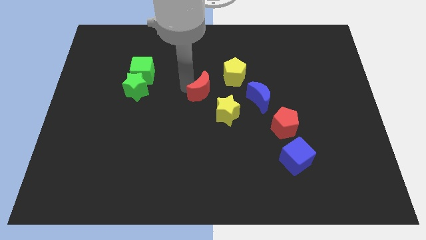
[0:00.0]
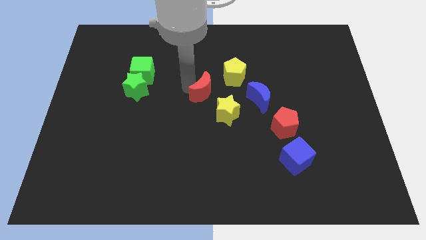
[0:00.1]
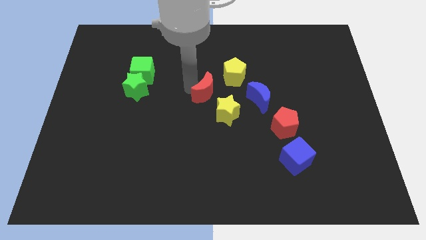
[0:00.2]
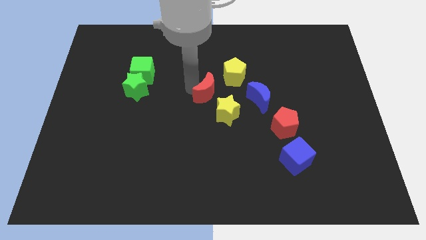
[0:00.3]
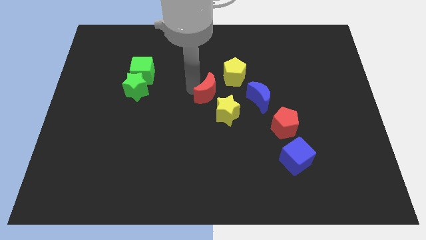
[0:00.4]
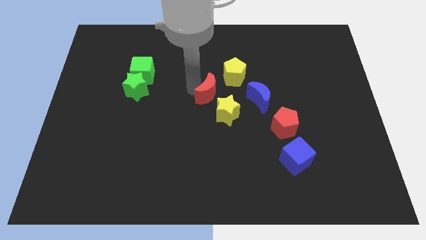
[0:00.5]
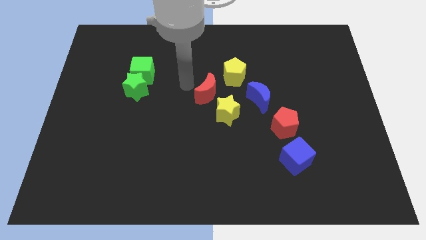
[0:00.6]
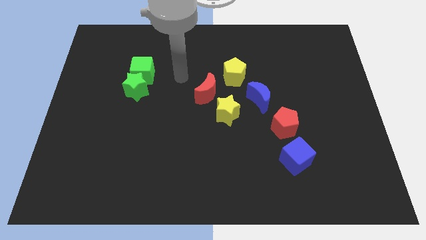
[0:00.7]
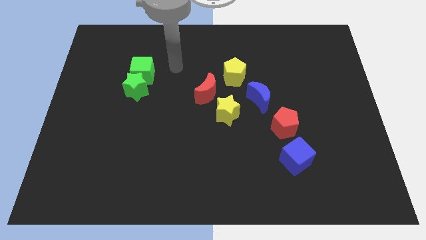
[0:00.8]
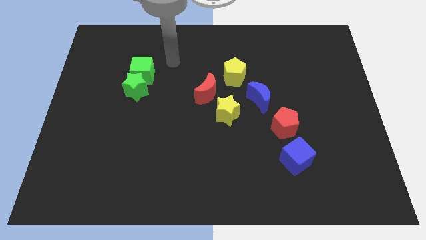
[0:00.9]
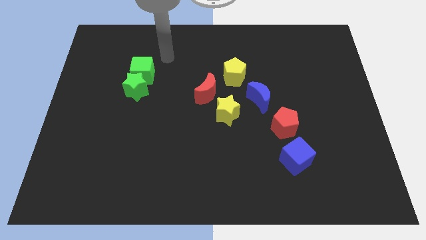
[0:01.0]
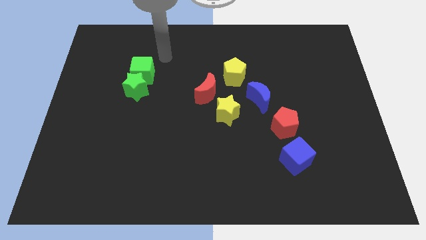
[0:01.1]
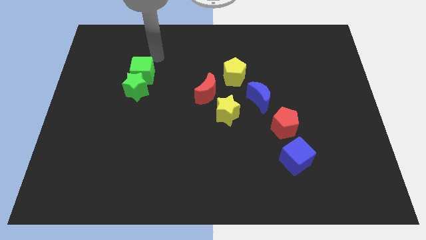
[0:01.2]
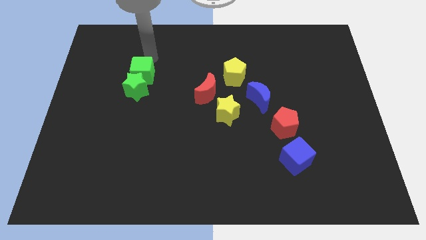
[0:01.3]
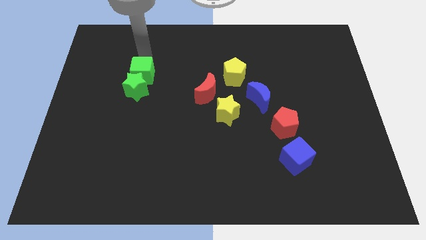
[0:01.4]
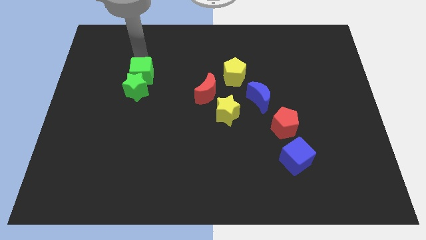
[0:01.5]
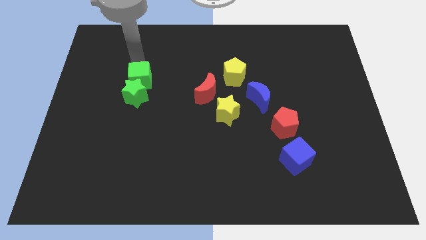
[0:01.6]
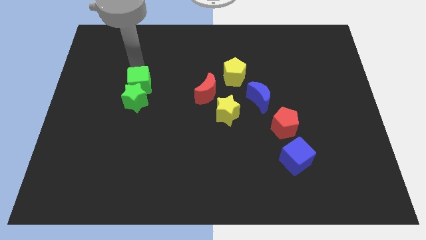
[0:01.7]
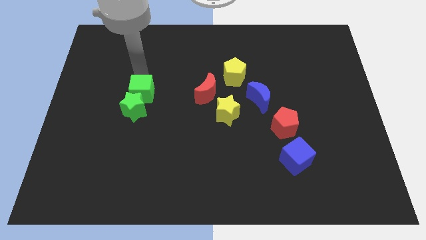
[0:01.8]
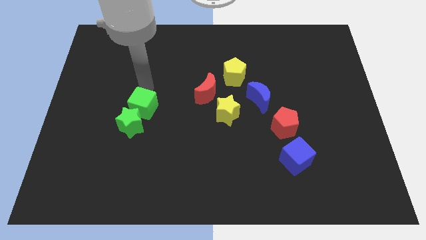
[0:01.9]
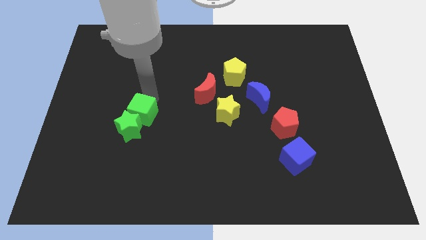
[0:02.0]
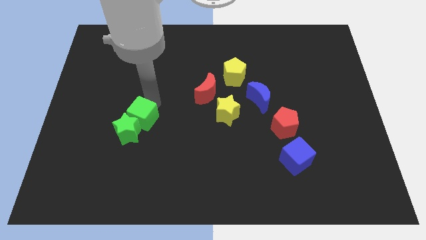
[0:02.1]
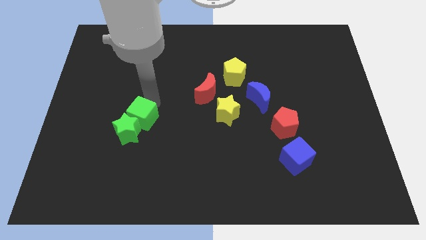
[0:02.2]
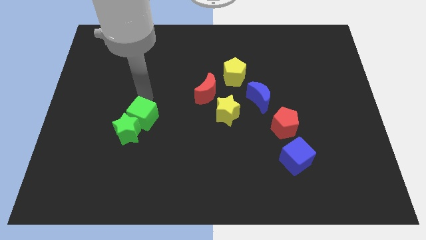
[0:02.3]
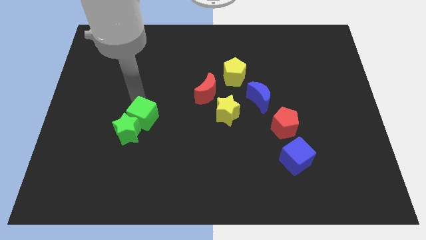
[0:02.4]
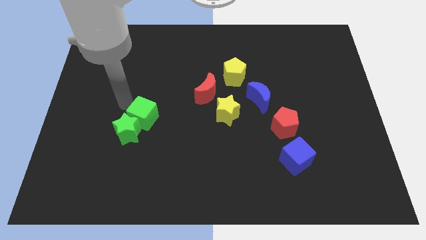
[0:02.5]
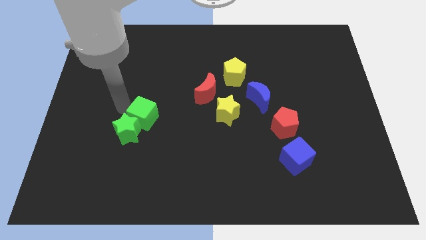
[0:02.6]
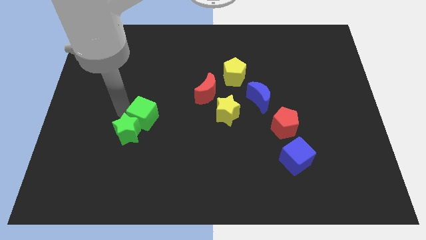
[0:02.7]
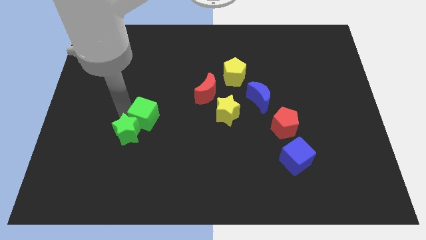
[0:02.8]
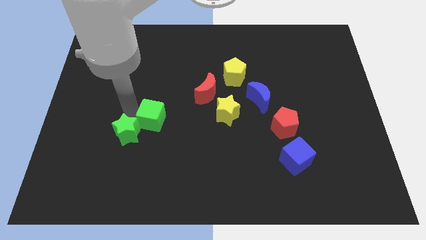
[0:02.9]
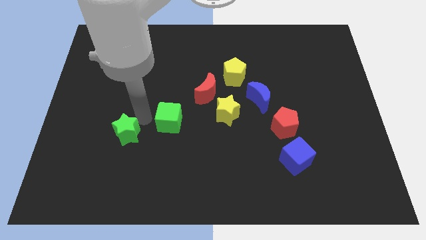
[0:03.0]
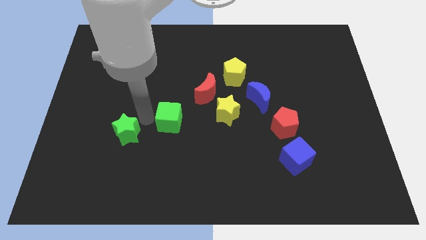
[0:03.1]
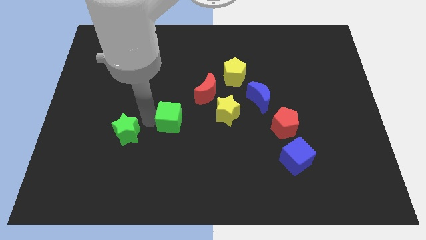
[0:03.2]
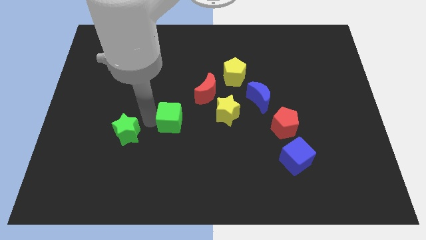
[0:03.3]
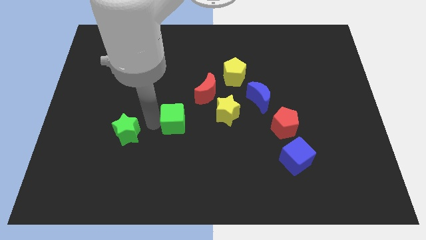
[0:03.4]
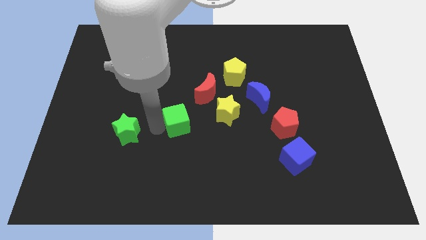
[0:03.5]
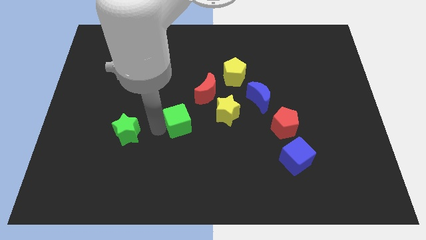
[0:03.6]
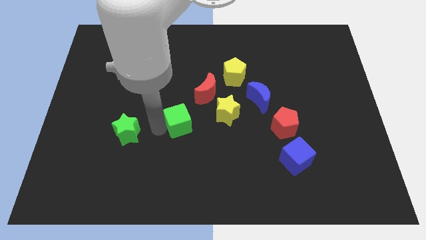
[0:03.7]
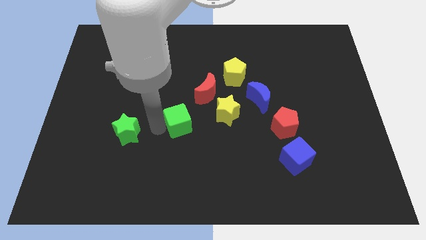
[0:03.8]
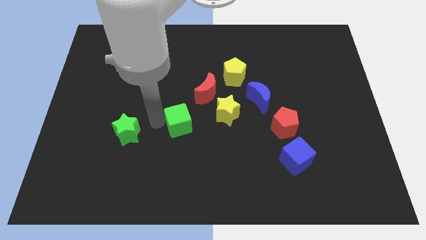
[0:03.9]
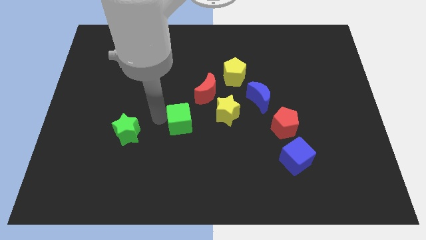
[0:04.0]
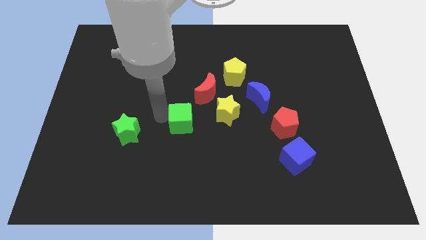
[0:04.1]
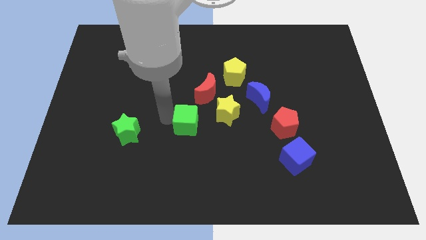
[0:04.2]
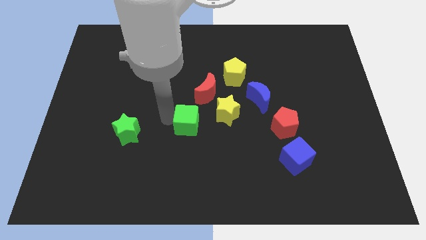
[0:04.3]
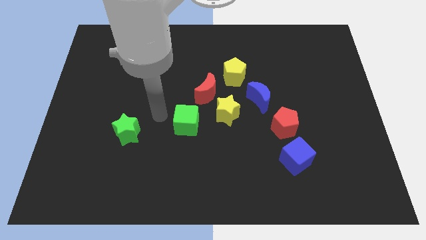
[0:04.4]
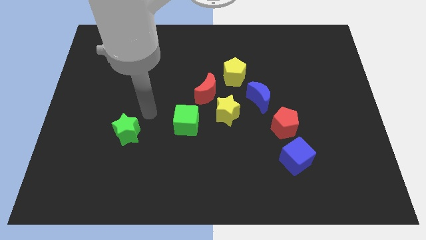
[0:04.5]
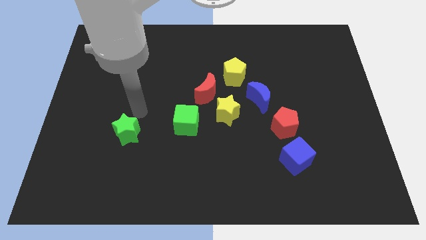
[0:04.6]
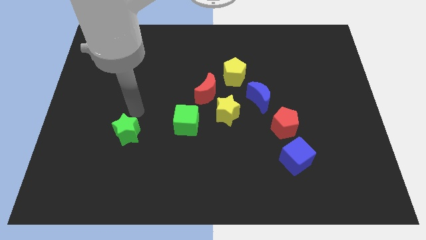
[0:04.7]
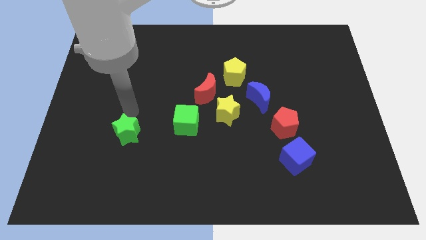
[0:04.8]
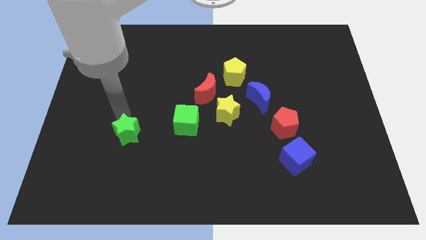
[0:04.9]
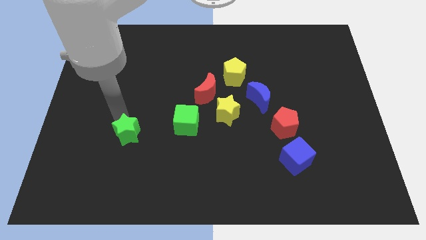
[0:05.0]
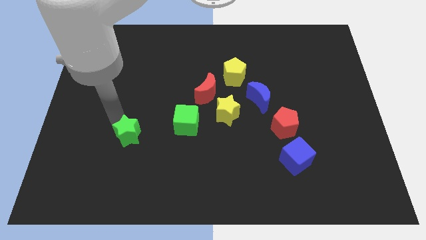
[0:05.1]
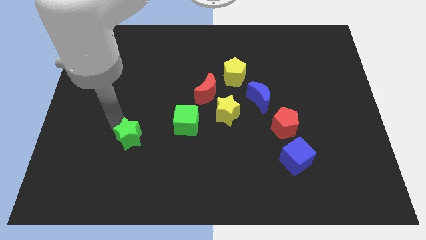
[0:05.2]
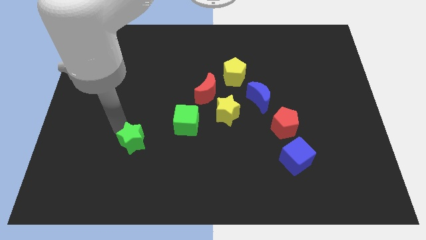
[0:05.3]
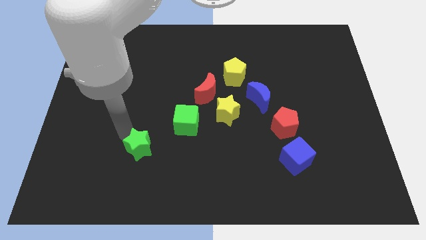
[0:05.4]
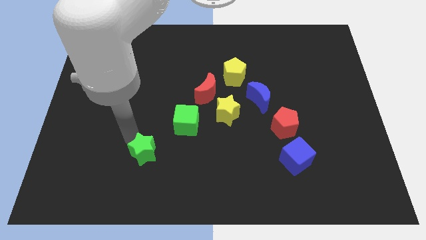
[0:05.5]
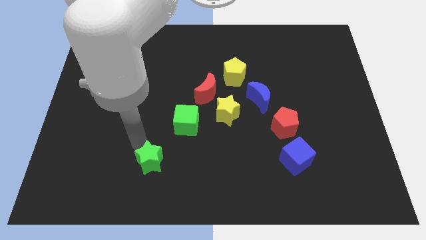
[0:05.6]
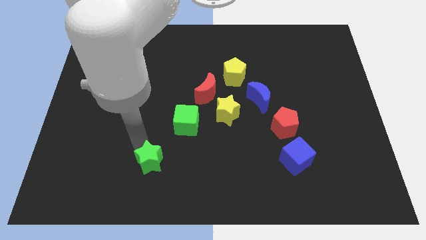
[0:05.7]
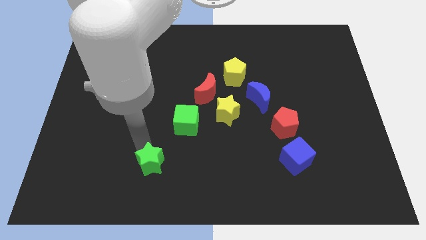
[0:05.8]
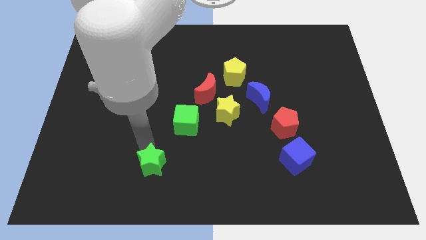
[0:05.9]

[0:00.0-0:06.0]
place the green star diagonally to the bottom left of the green cube

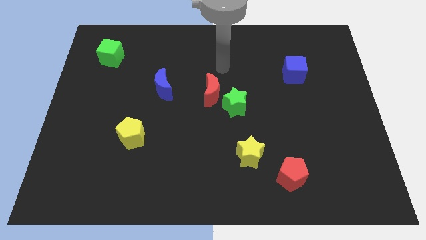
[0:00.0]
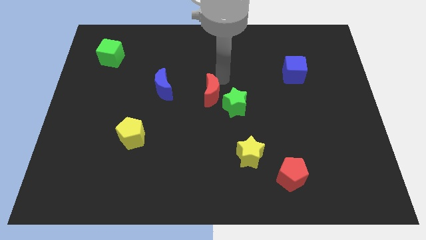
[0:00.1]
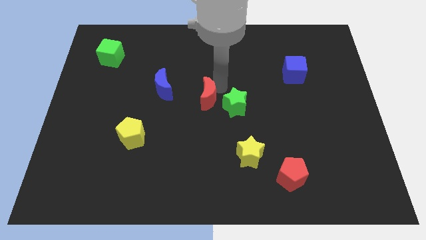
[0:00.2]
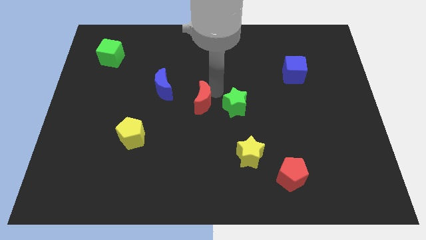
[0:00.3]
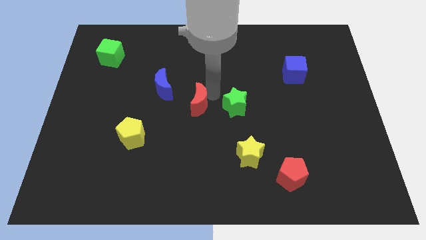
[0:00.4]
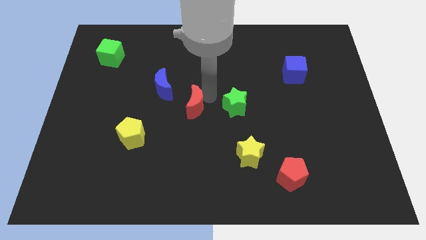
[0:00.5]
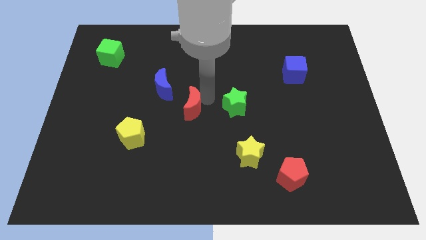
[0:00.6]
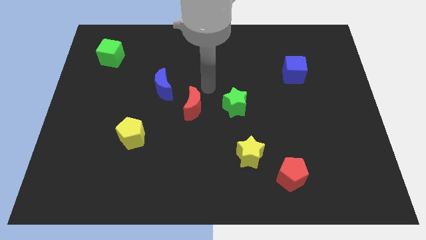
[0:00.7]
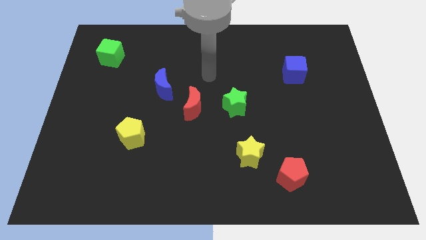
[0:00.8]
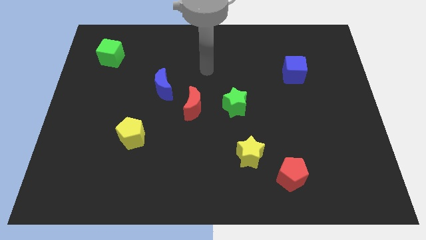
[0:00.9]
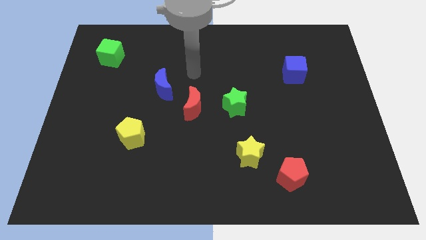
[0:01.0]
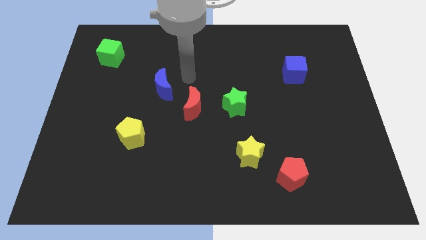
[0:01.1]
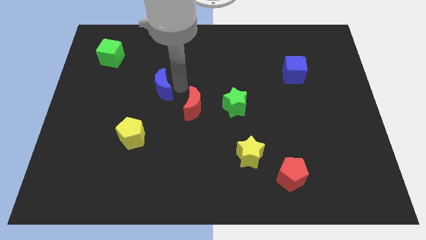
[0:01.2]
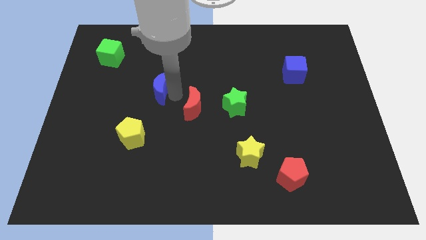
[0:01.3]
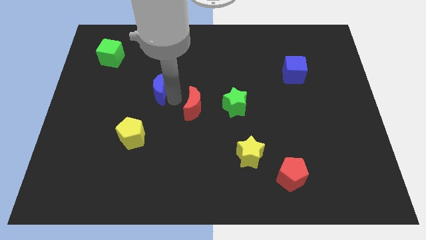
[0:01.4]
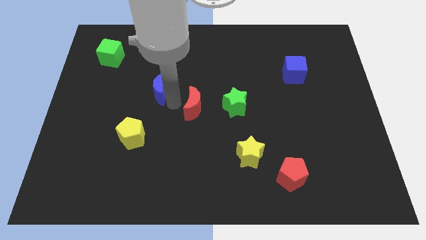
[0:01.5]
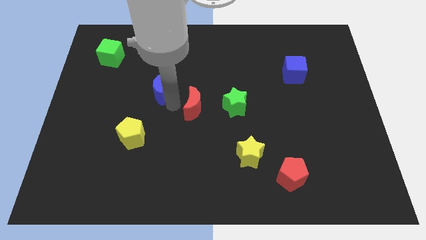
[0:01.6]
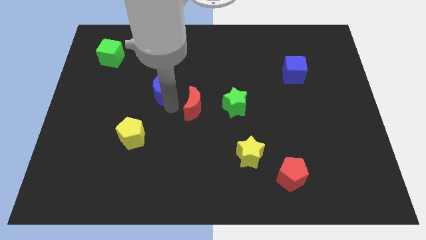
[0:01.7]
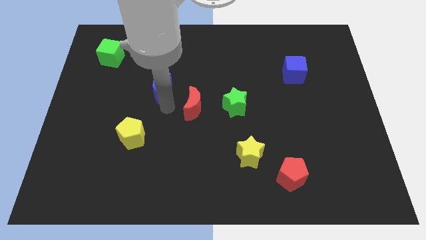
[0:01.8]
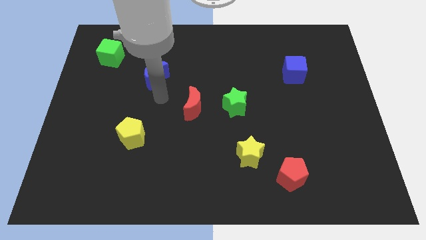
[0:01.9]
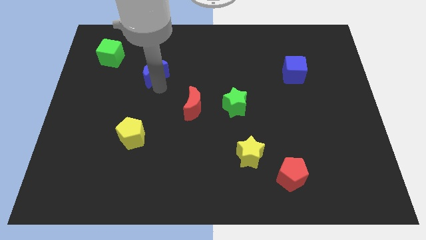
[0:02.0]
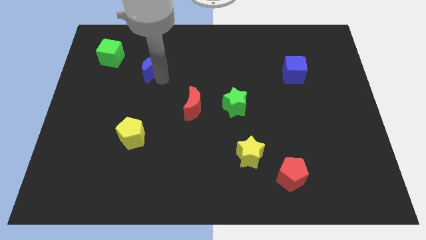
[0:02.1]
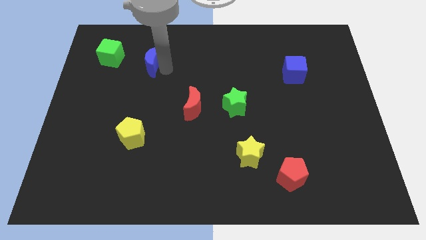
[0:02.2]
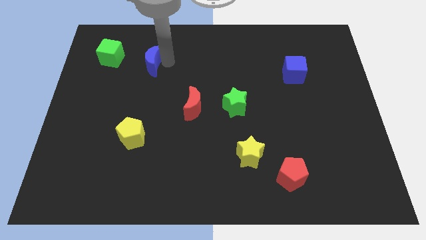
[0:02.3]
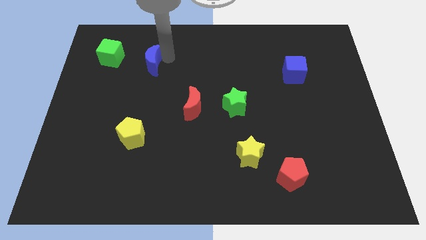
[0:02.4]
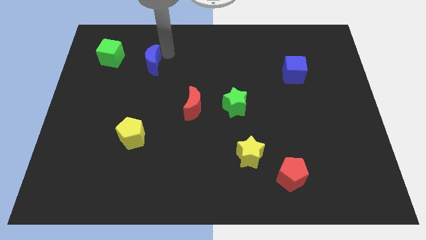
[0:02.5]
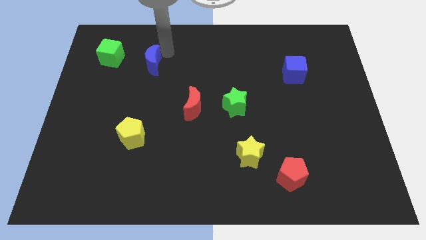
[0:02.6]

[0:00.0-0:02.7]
place the blue moon right to the green cube

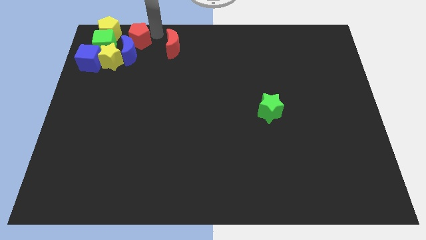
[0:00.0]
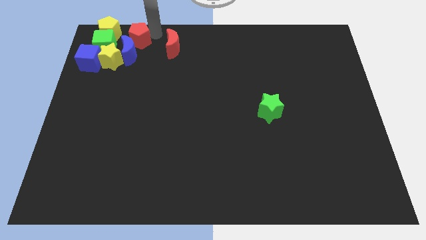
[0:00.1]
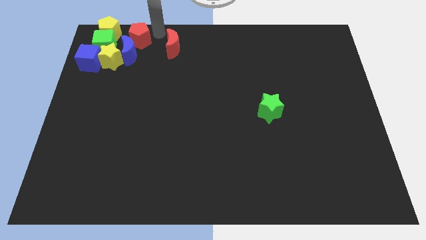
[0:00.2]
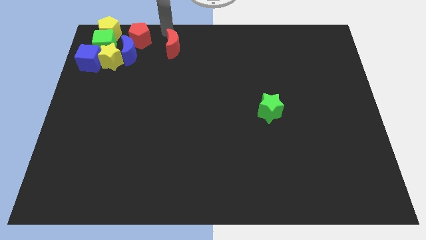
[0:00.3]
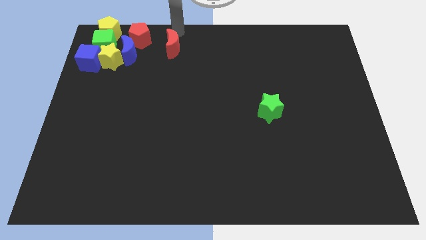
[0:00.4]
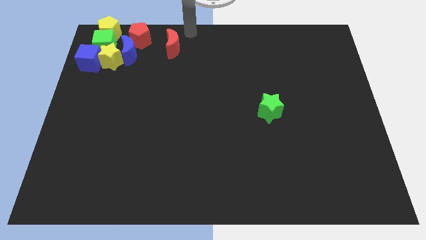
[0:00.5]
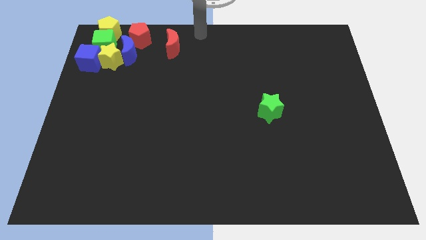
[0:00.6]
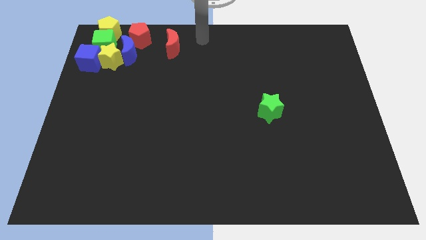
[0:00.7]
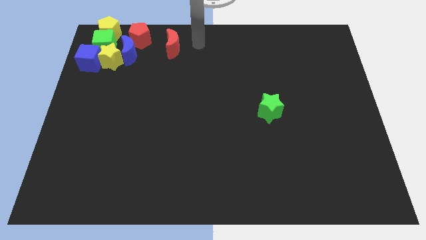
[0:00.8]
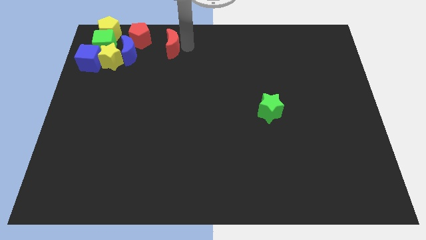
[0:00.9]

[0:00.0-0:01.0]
move your arm to the right of red crescent
